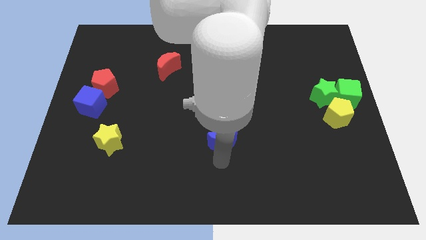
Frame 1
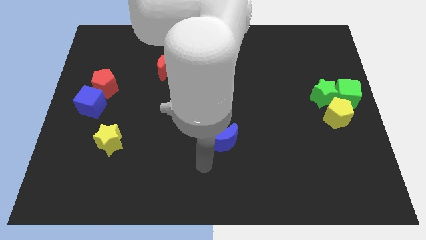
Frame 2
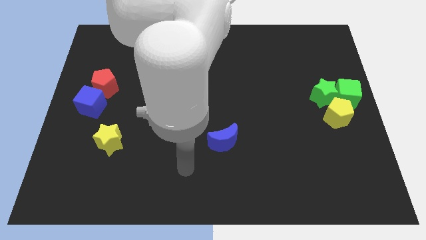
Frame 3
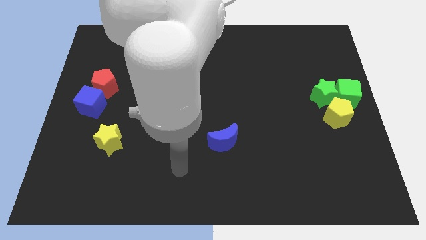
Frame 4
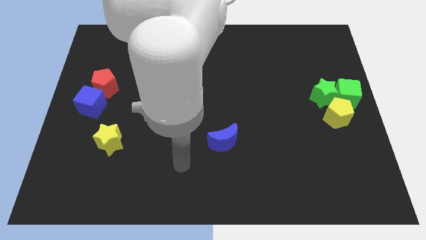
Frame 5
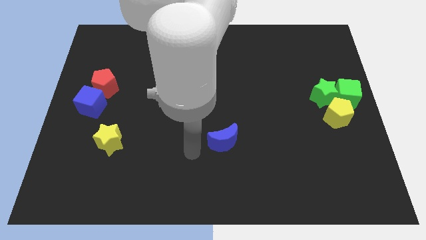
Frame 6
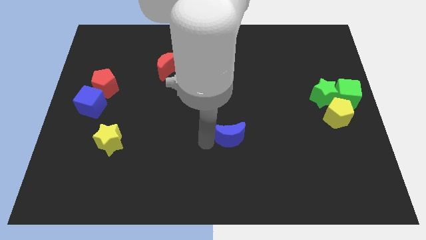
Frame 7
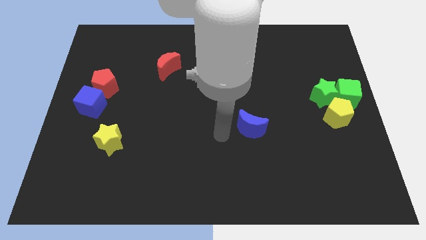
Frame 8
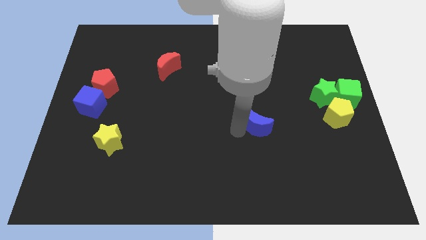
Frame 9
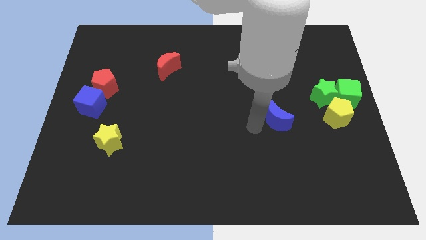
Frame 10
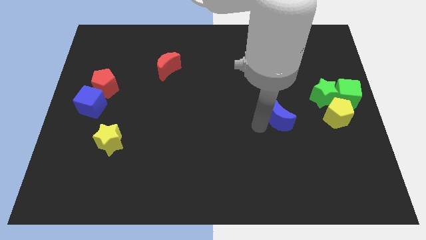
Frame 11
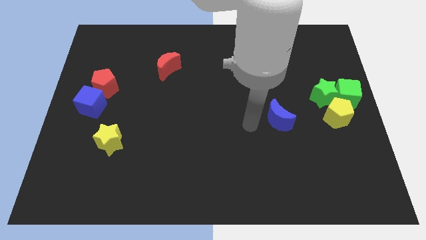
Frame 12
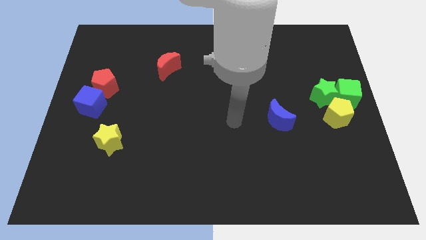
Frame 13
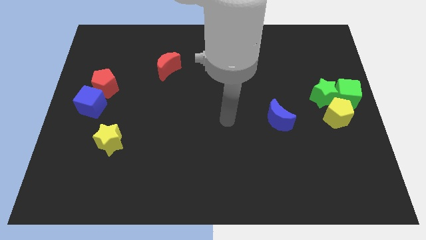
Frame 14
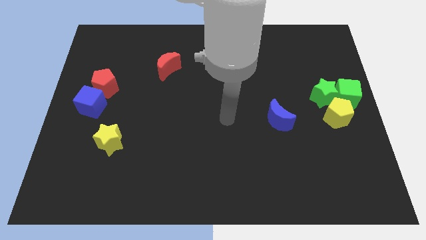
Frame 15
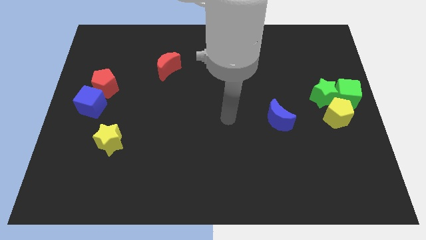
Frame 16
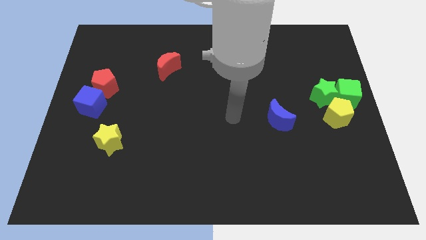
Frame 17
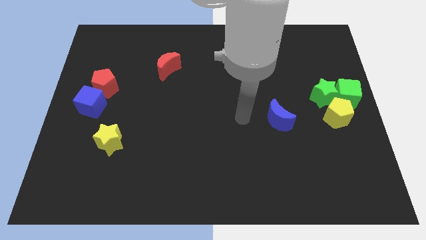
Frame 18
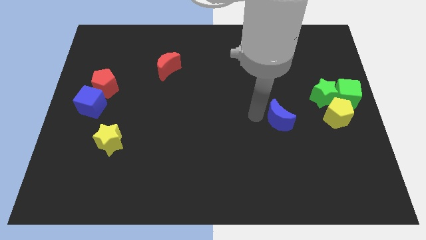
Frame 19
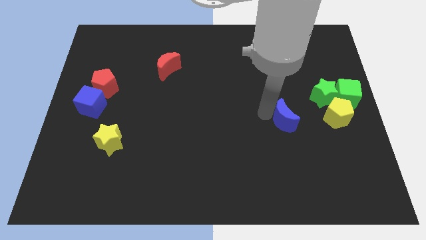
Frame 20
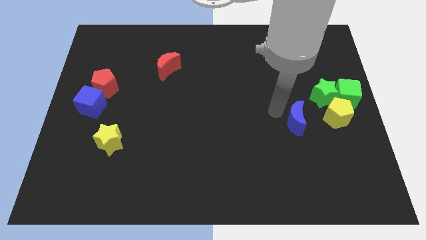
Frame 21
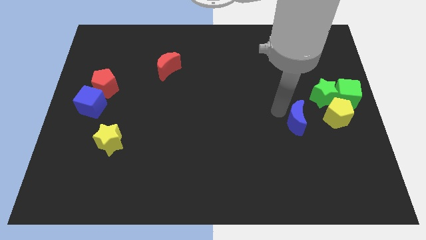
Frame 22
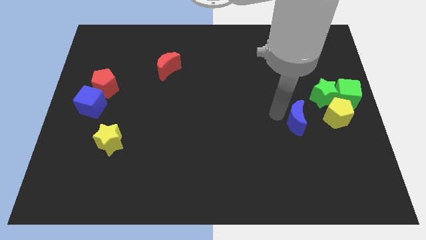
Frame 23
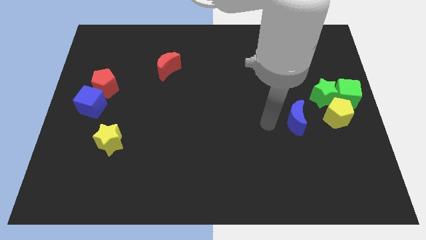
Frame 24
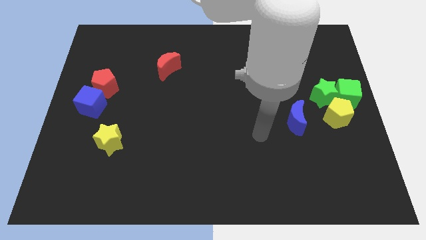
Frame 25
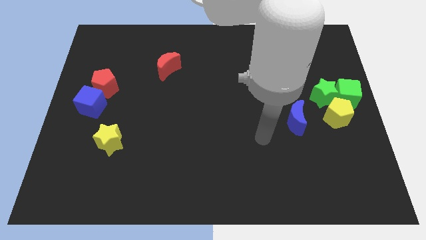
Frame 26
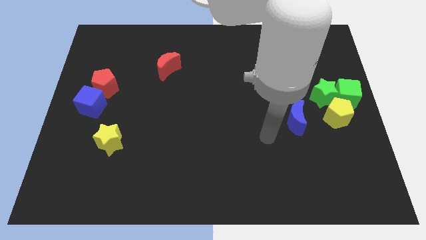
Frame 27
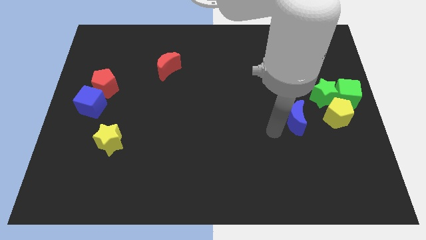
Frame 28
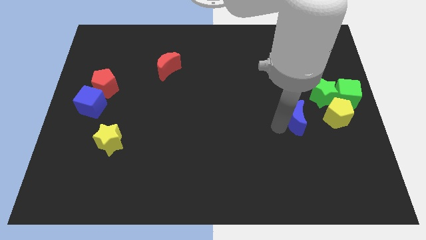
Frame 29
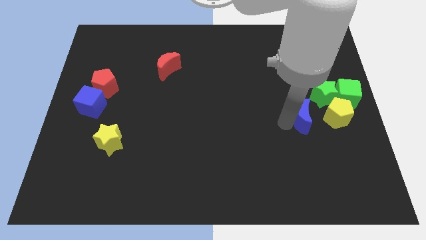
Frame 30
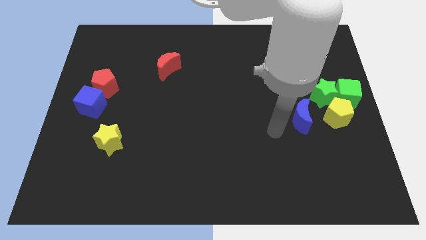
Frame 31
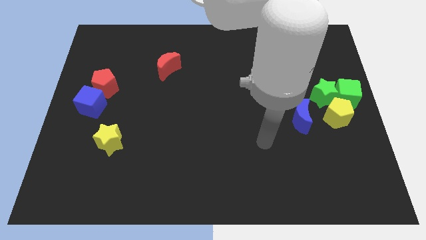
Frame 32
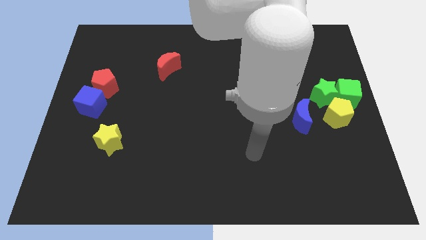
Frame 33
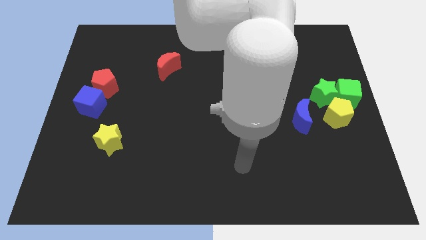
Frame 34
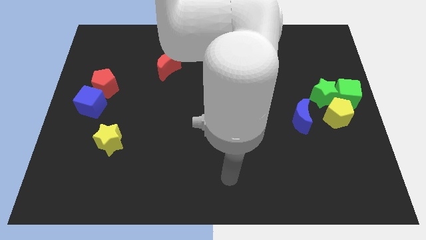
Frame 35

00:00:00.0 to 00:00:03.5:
move the blue crescent to the left of the yellow pentagon

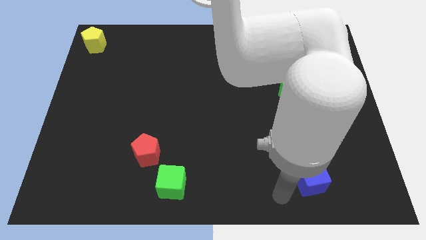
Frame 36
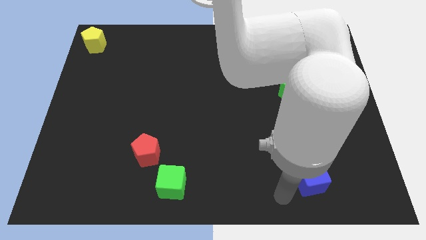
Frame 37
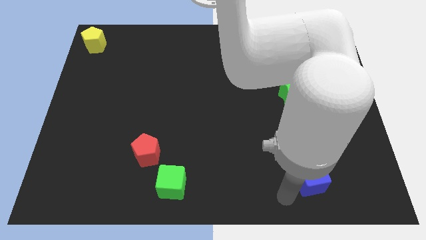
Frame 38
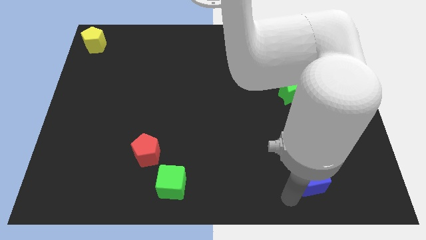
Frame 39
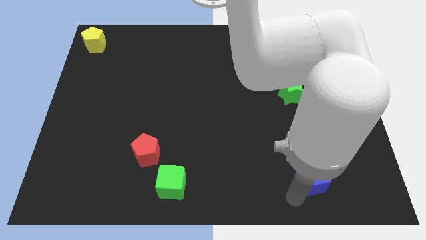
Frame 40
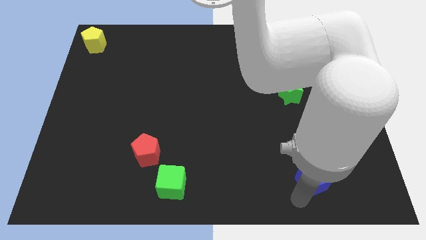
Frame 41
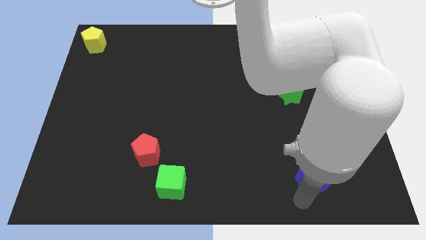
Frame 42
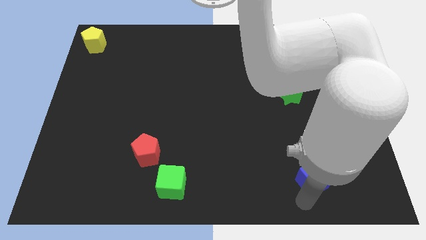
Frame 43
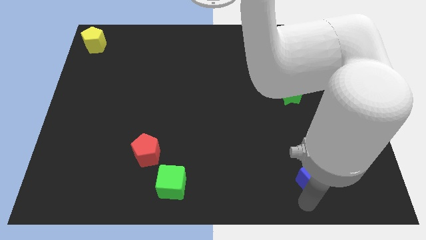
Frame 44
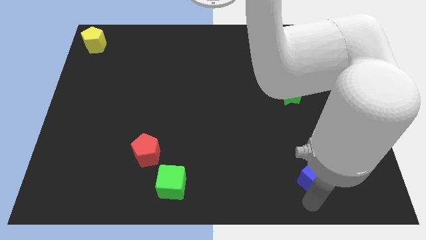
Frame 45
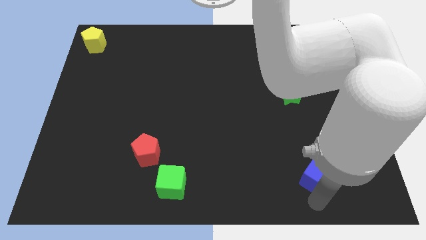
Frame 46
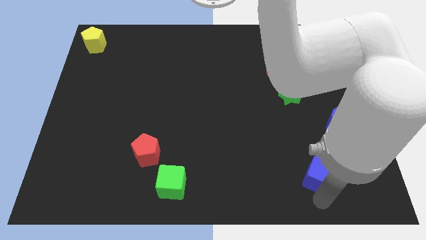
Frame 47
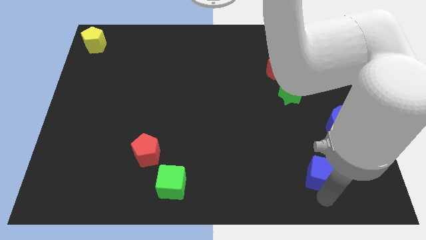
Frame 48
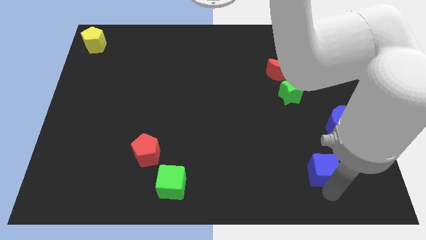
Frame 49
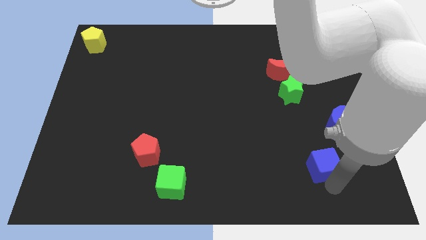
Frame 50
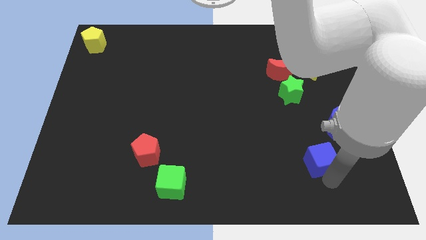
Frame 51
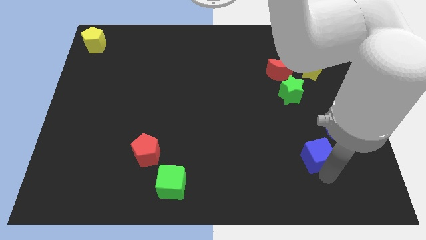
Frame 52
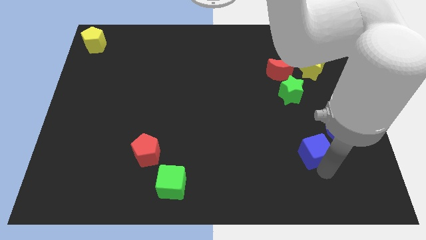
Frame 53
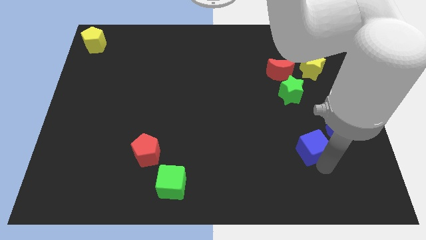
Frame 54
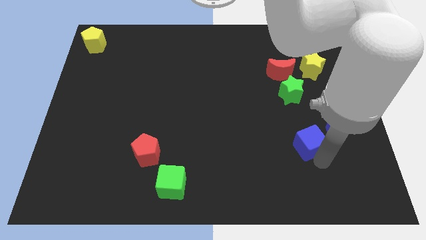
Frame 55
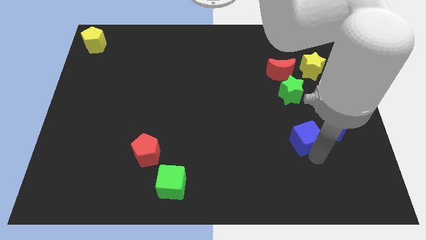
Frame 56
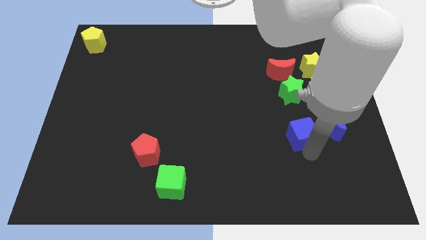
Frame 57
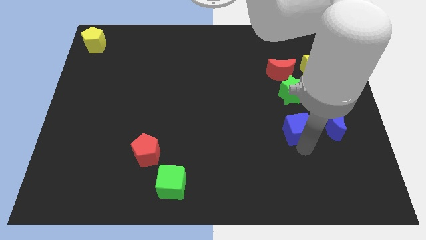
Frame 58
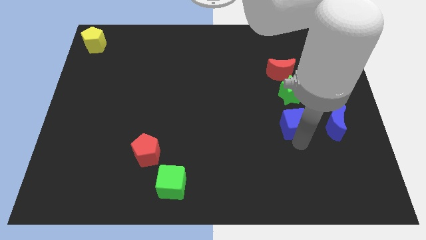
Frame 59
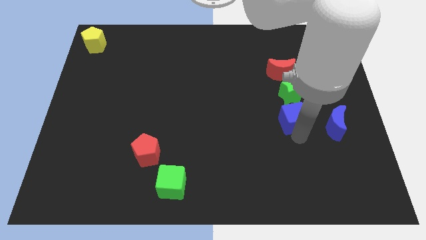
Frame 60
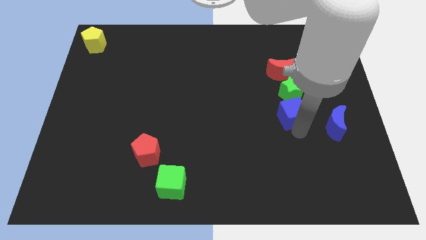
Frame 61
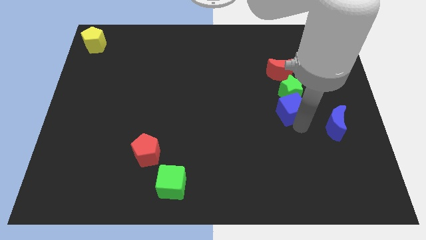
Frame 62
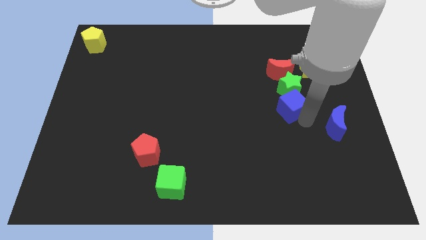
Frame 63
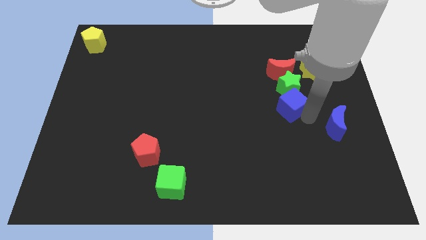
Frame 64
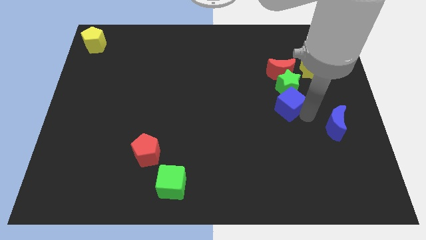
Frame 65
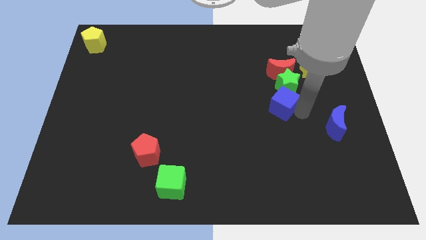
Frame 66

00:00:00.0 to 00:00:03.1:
move blue cube into green star

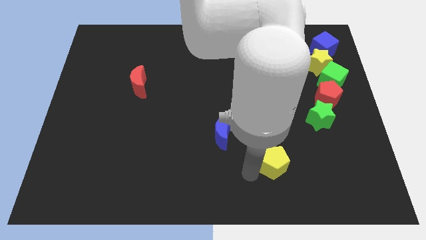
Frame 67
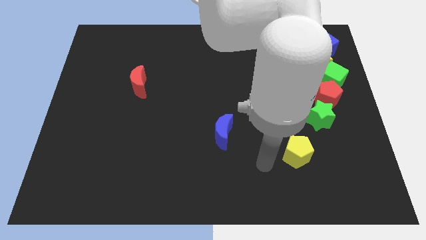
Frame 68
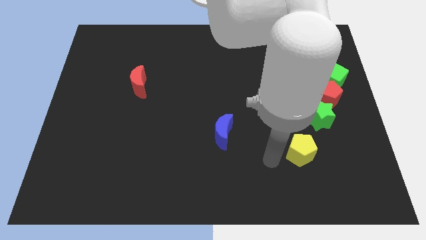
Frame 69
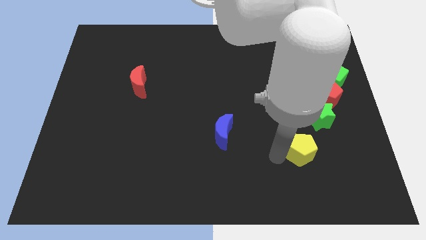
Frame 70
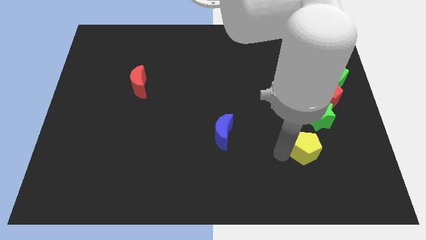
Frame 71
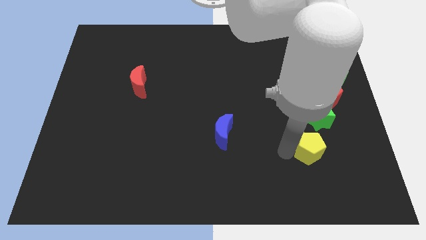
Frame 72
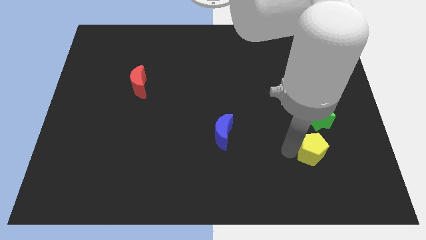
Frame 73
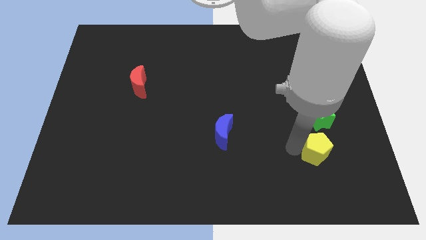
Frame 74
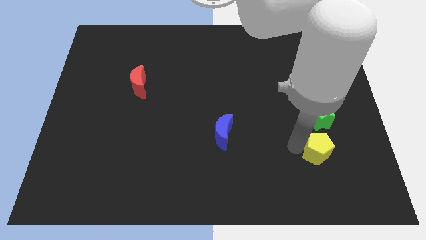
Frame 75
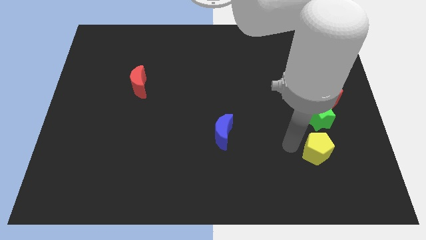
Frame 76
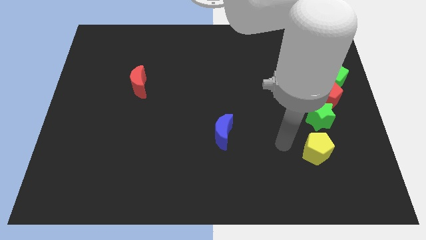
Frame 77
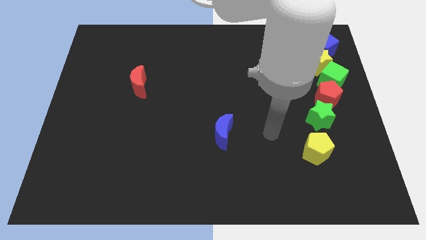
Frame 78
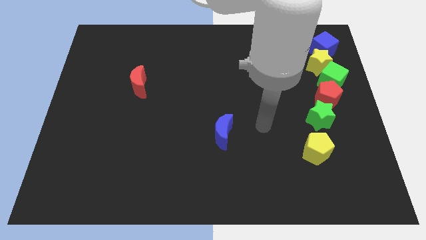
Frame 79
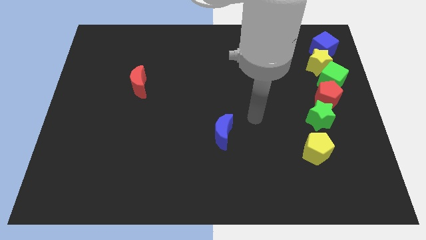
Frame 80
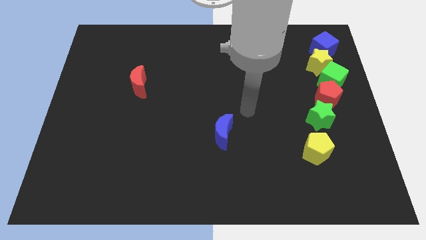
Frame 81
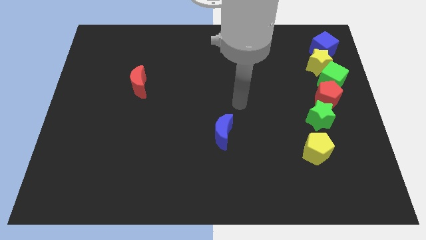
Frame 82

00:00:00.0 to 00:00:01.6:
drag the yellow pentagon and place it below the green star

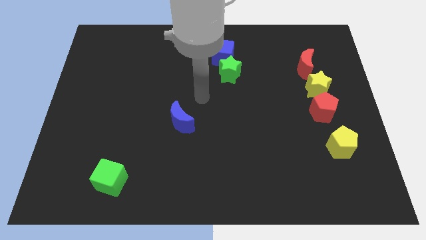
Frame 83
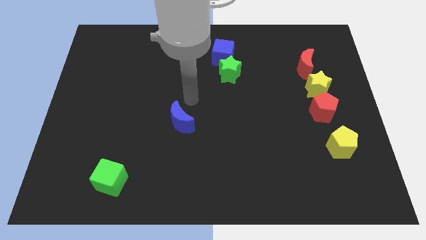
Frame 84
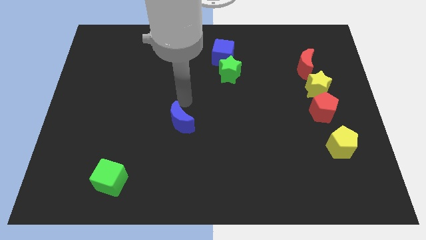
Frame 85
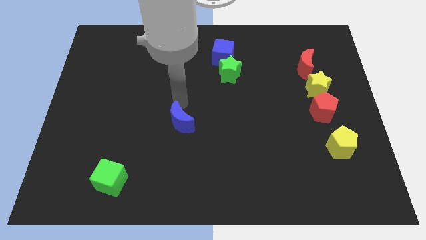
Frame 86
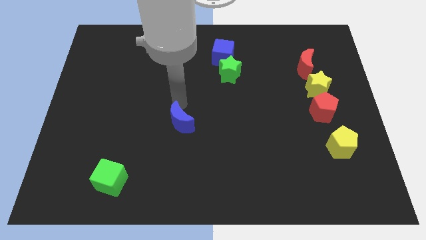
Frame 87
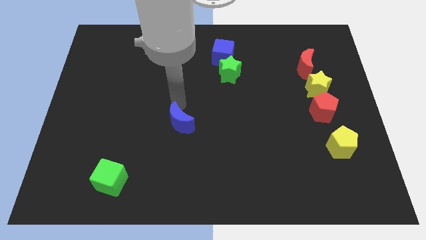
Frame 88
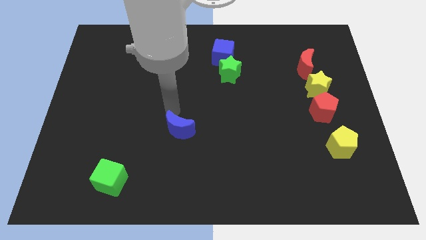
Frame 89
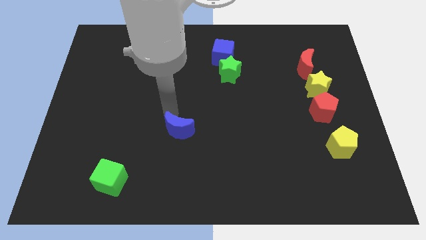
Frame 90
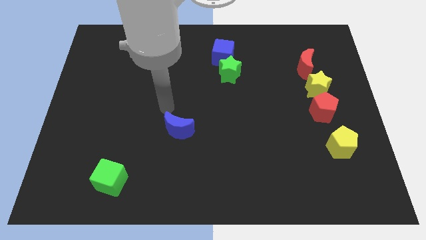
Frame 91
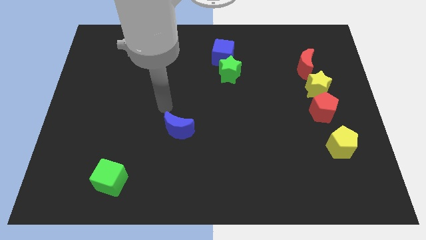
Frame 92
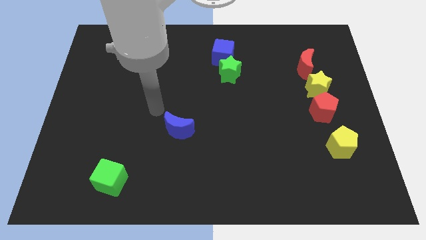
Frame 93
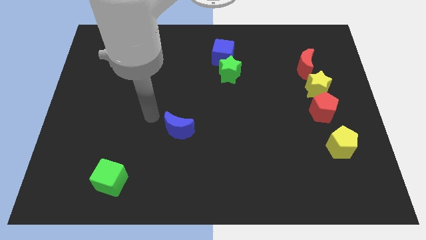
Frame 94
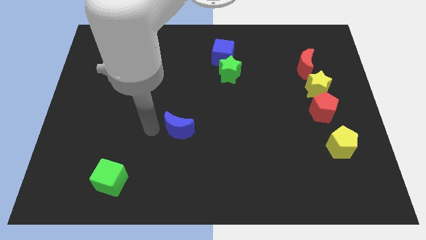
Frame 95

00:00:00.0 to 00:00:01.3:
move the blue moon downwards slightly
